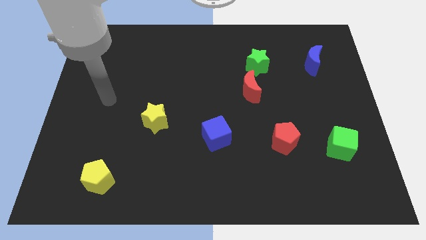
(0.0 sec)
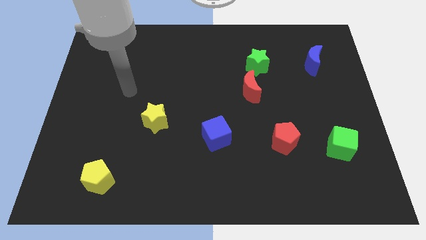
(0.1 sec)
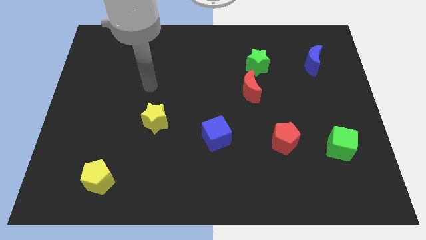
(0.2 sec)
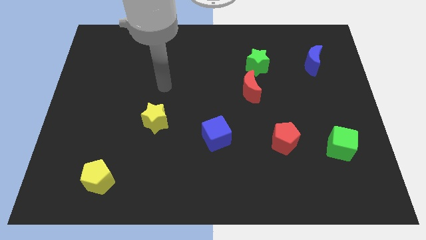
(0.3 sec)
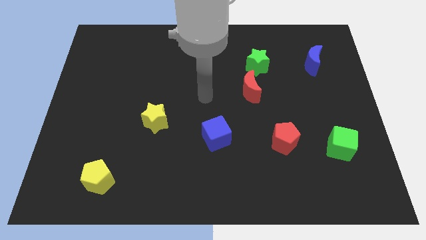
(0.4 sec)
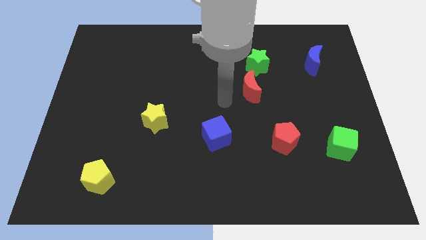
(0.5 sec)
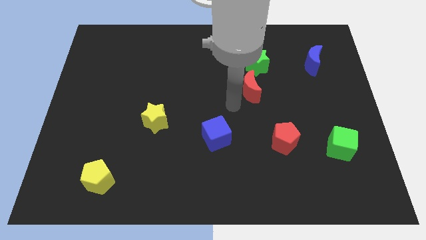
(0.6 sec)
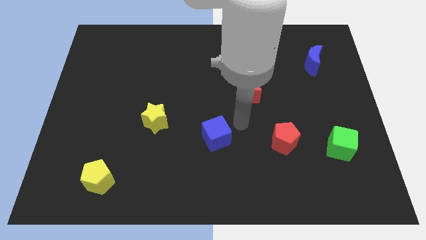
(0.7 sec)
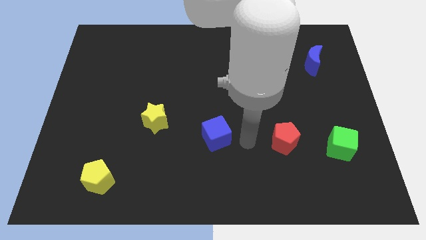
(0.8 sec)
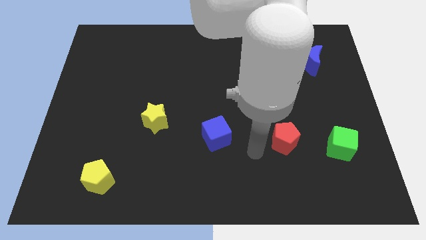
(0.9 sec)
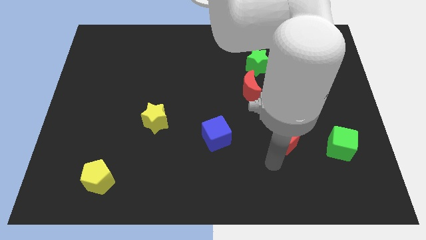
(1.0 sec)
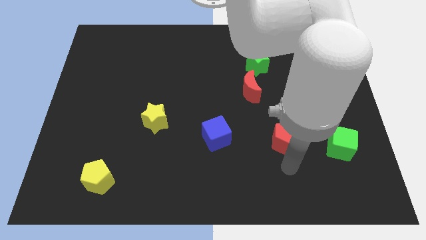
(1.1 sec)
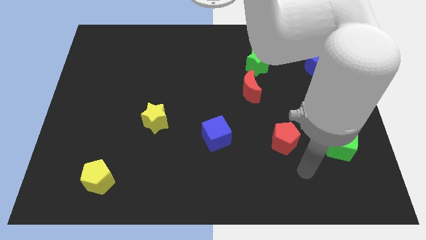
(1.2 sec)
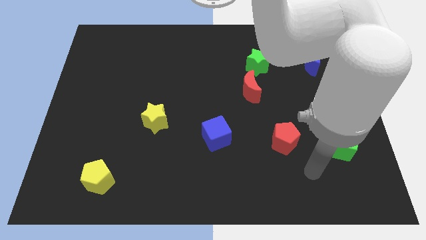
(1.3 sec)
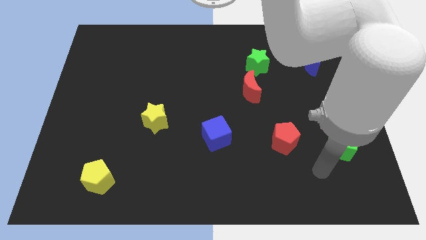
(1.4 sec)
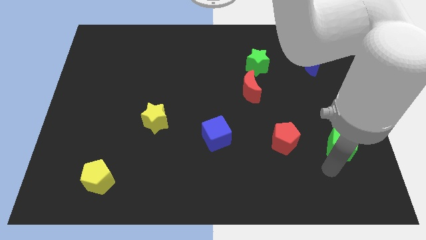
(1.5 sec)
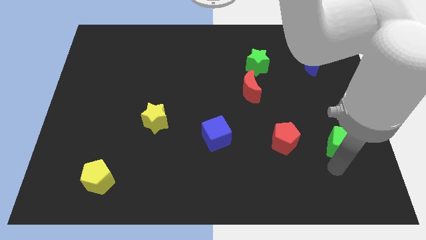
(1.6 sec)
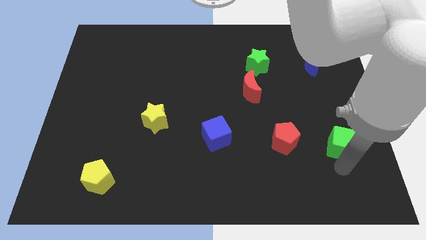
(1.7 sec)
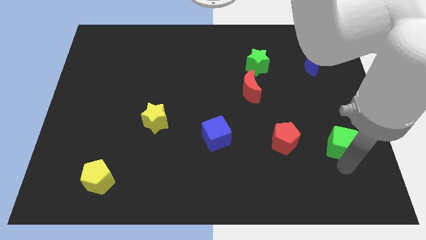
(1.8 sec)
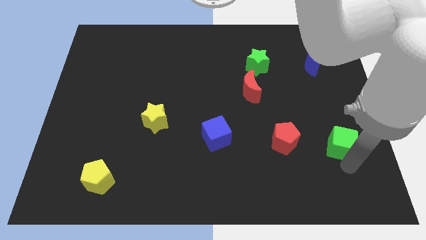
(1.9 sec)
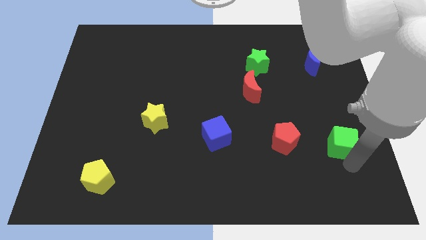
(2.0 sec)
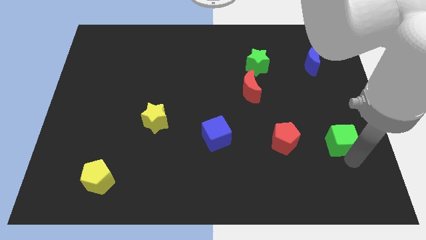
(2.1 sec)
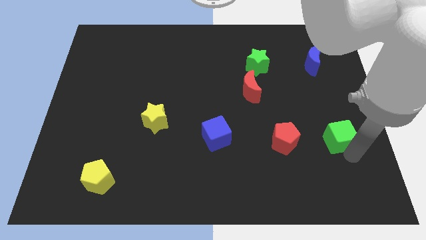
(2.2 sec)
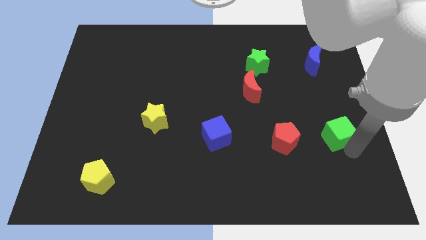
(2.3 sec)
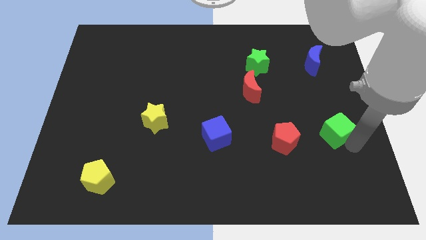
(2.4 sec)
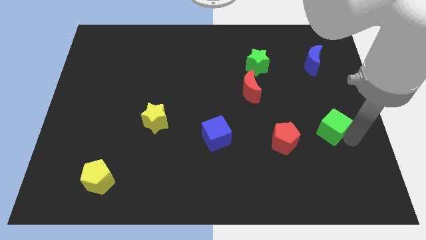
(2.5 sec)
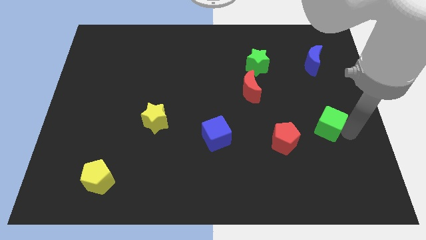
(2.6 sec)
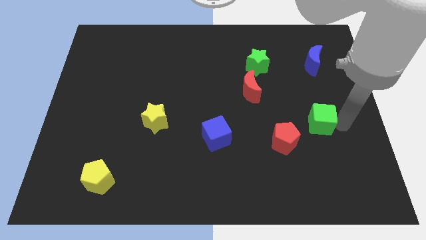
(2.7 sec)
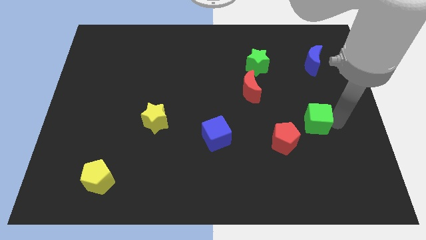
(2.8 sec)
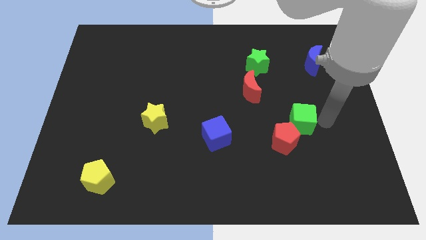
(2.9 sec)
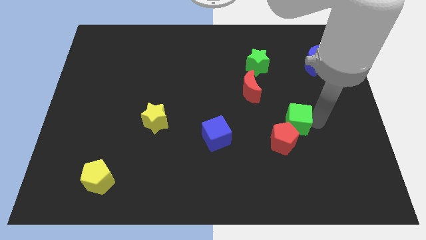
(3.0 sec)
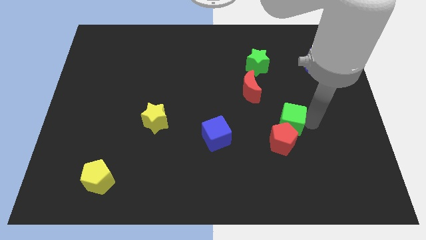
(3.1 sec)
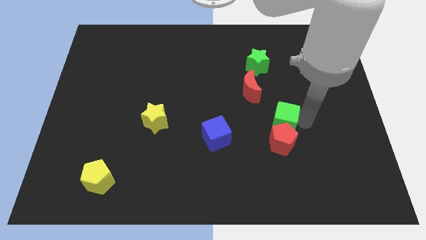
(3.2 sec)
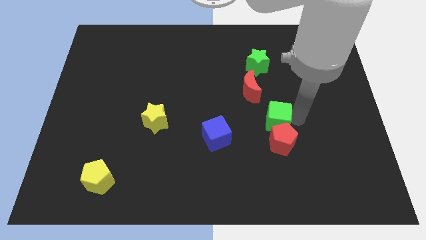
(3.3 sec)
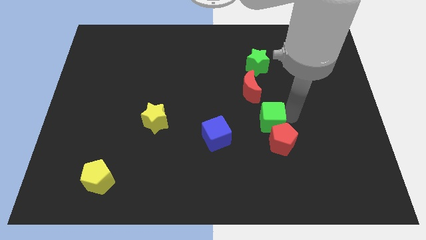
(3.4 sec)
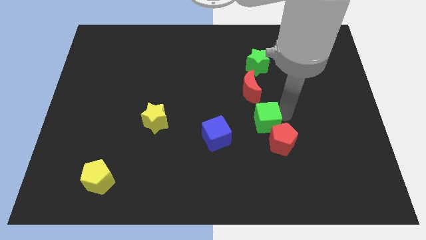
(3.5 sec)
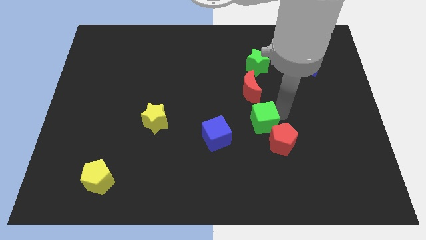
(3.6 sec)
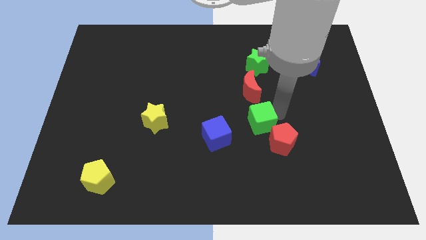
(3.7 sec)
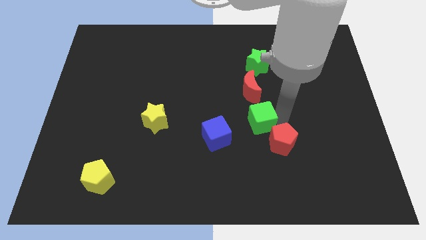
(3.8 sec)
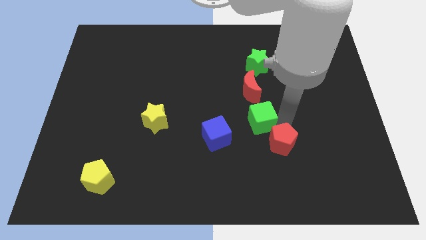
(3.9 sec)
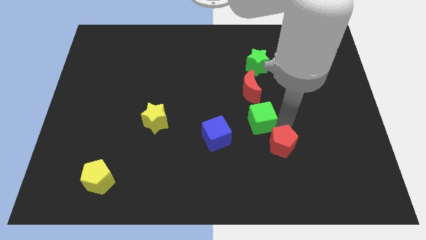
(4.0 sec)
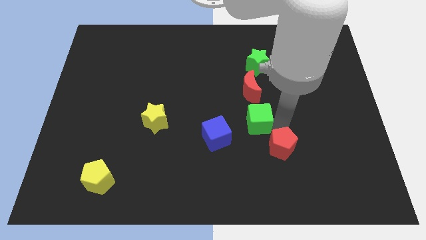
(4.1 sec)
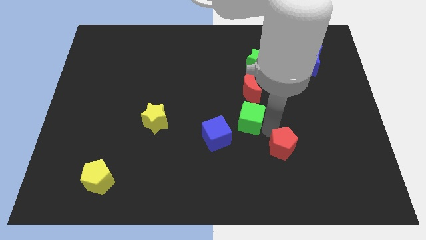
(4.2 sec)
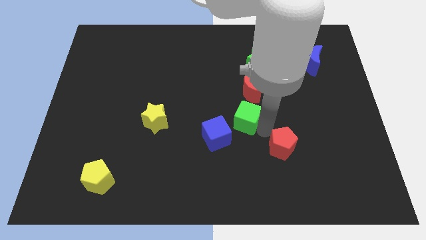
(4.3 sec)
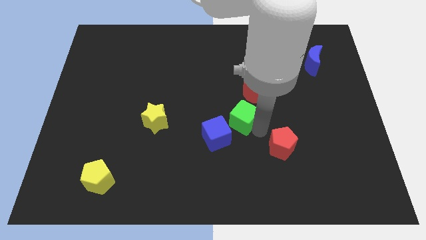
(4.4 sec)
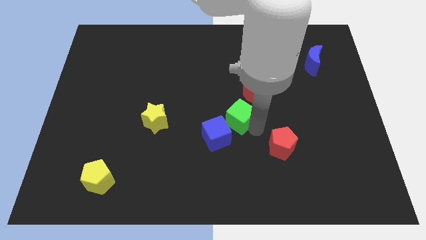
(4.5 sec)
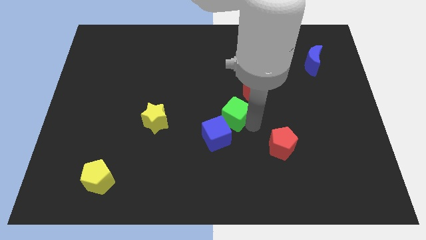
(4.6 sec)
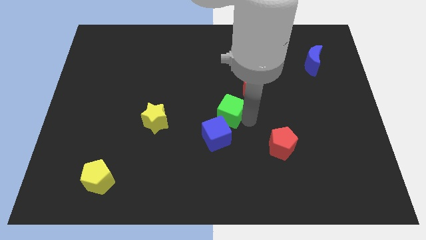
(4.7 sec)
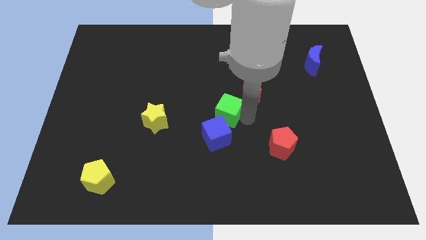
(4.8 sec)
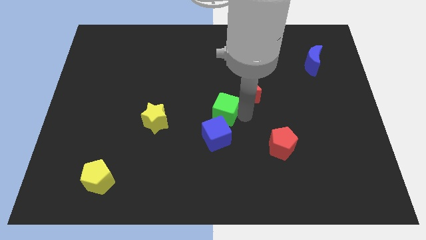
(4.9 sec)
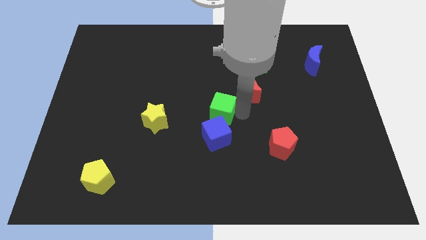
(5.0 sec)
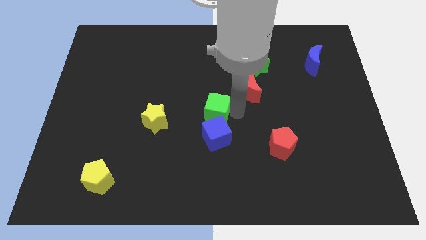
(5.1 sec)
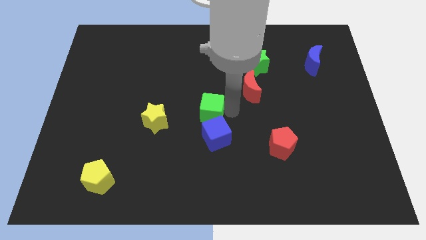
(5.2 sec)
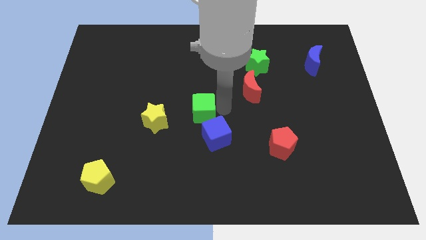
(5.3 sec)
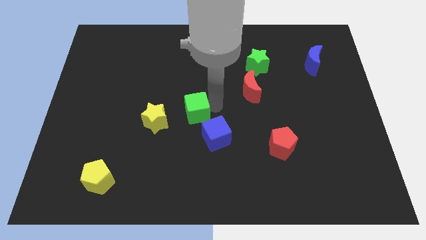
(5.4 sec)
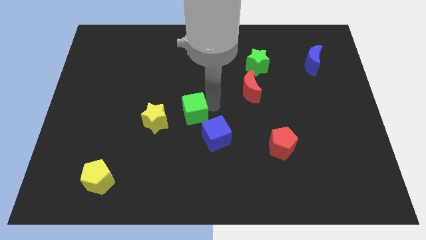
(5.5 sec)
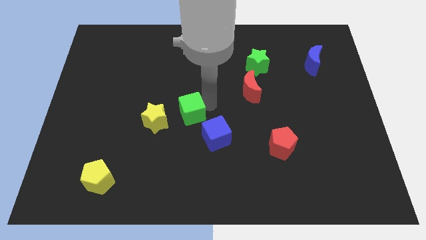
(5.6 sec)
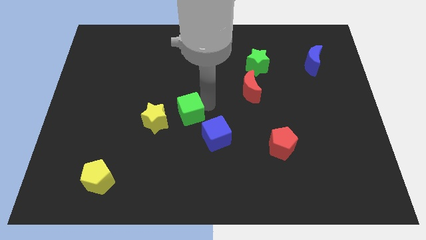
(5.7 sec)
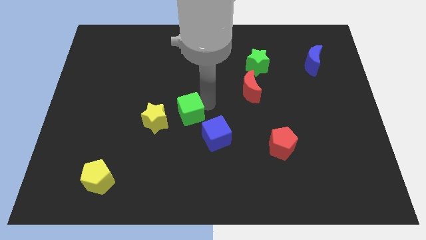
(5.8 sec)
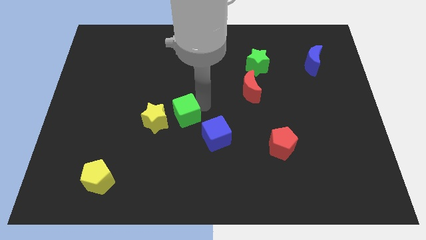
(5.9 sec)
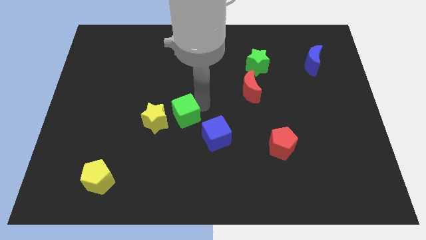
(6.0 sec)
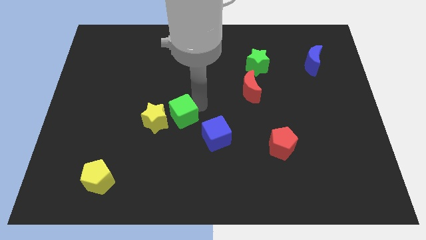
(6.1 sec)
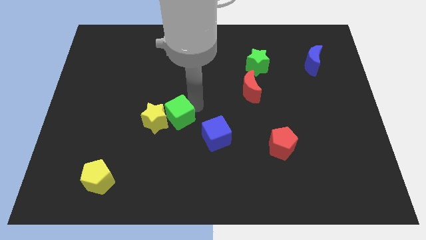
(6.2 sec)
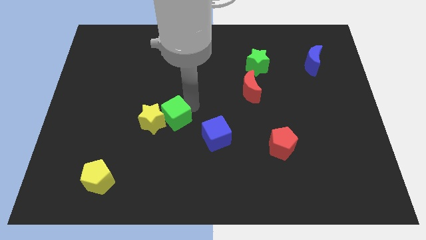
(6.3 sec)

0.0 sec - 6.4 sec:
move the green cube towards the yellow star

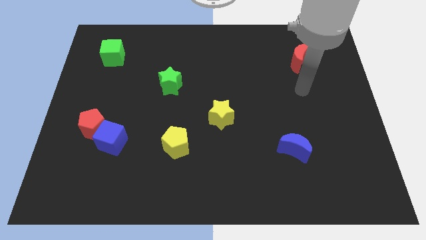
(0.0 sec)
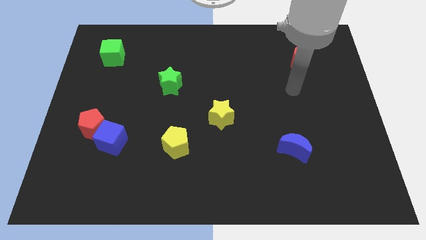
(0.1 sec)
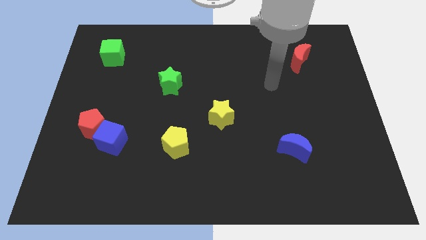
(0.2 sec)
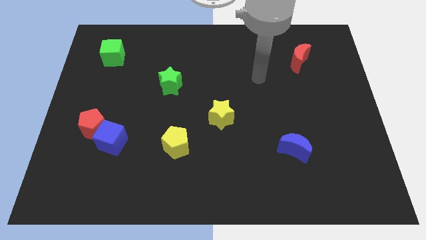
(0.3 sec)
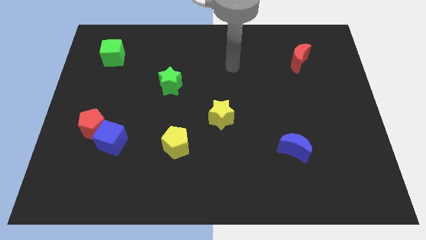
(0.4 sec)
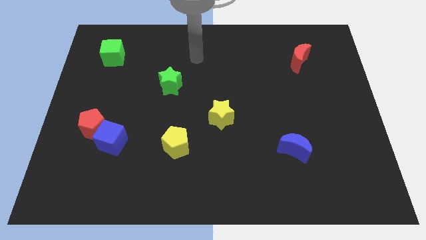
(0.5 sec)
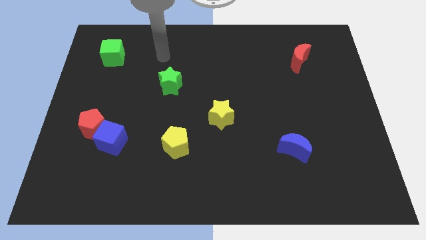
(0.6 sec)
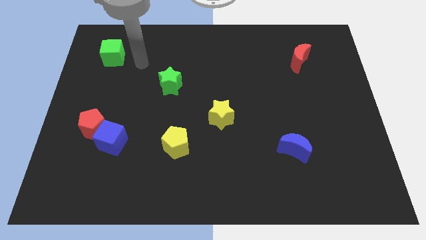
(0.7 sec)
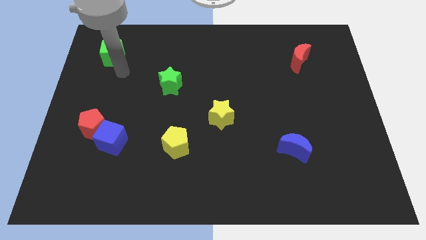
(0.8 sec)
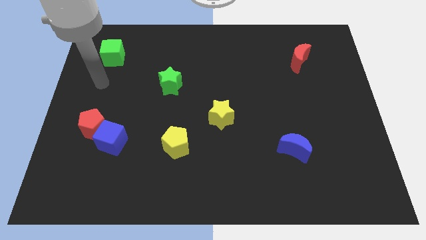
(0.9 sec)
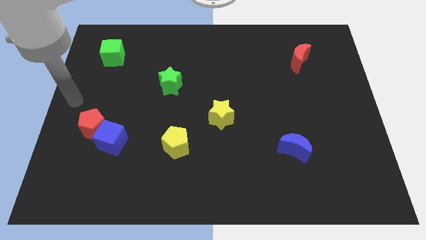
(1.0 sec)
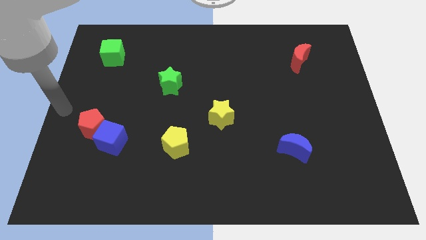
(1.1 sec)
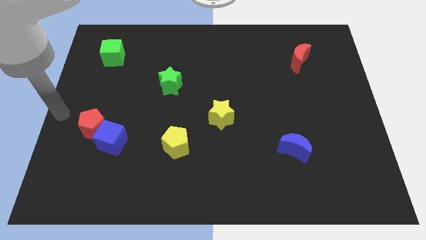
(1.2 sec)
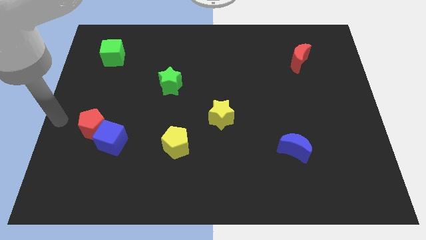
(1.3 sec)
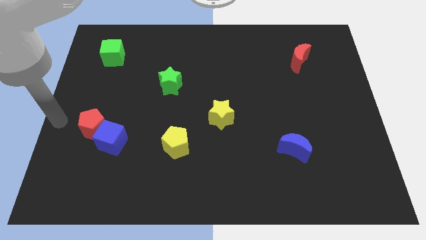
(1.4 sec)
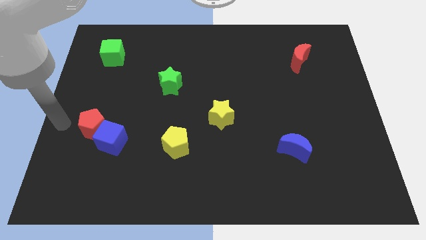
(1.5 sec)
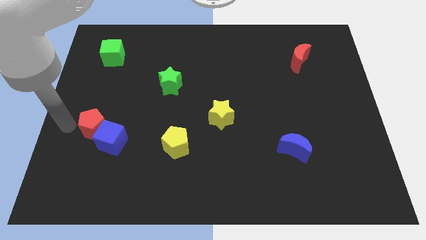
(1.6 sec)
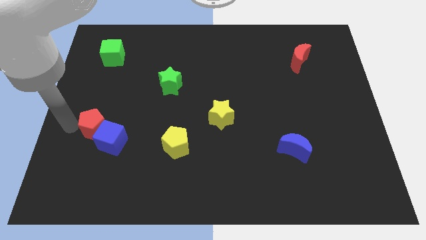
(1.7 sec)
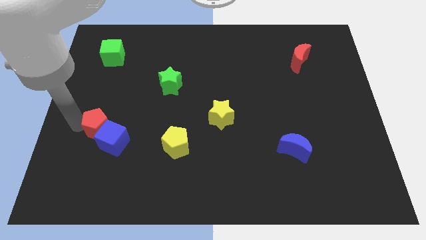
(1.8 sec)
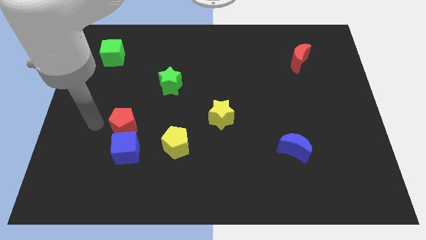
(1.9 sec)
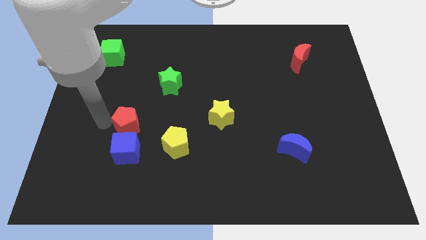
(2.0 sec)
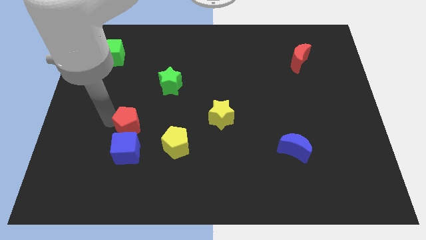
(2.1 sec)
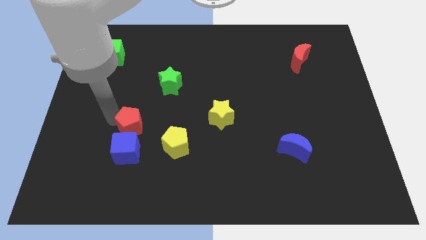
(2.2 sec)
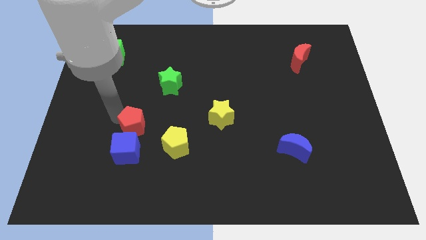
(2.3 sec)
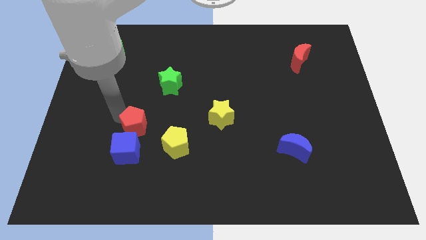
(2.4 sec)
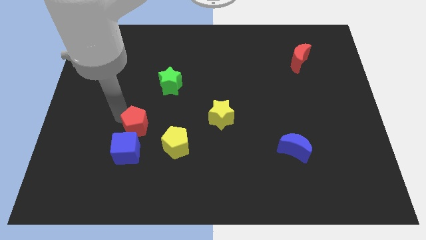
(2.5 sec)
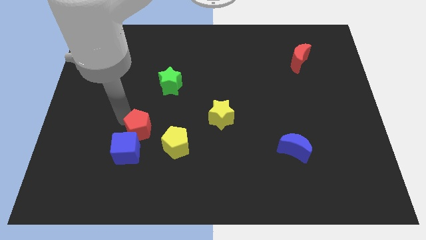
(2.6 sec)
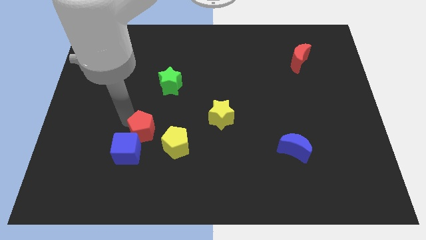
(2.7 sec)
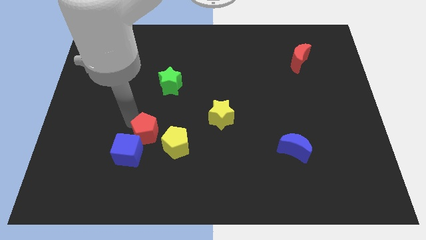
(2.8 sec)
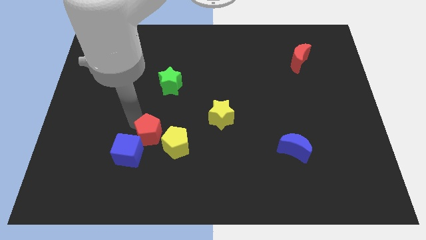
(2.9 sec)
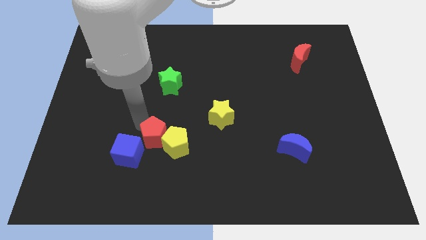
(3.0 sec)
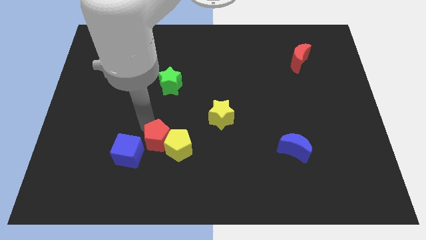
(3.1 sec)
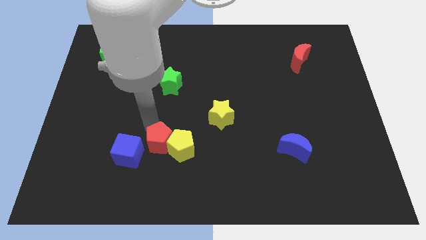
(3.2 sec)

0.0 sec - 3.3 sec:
move the red pentagon to the yellow pentagon
